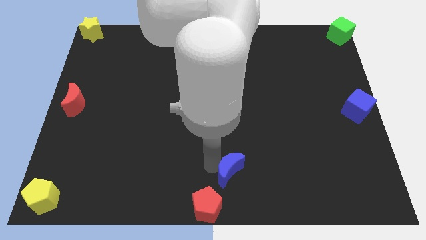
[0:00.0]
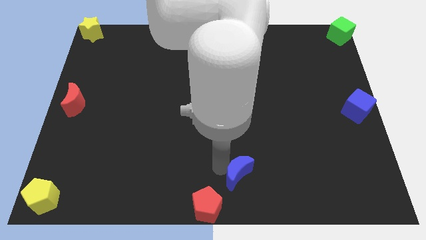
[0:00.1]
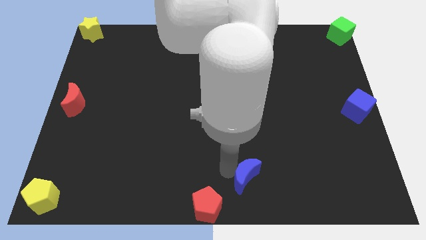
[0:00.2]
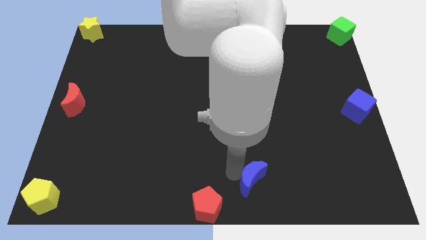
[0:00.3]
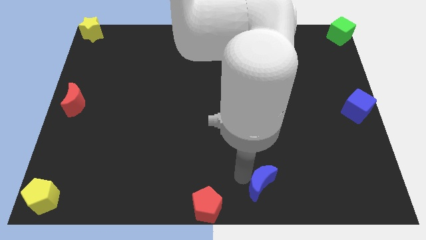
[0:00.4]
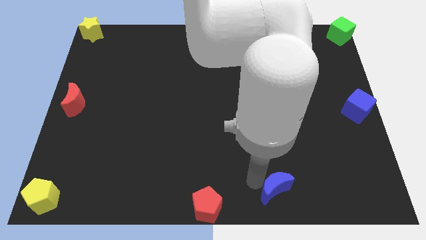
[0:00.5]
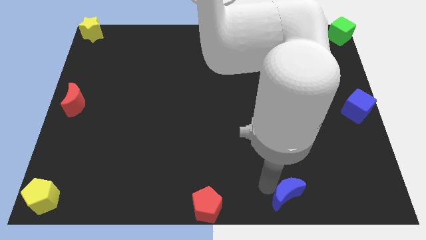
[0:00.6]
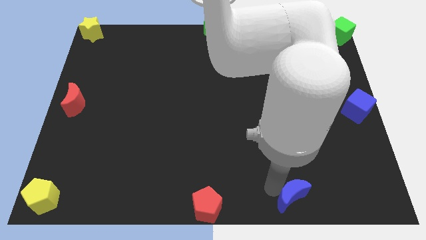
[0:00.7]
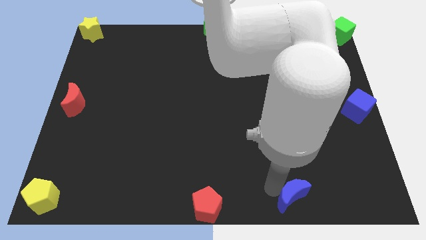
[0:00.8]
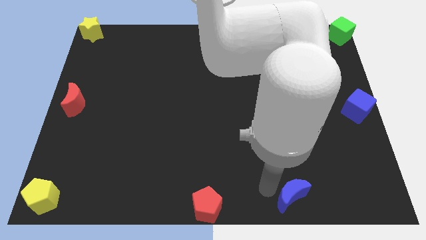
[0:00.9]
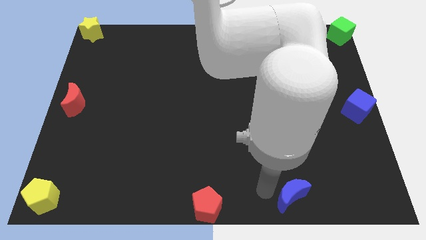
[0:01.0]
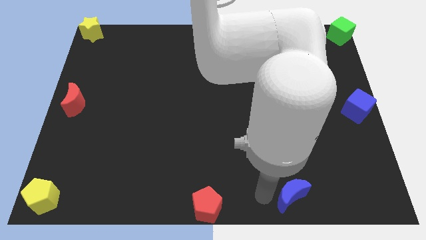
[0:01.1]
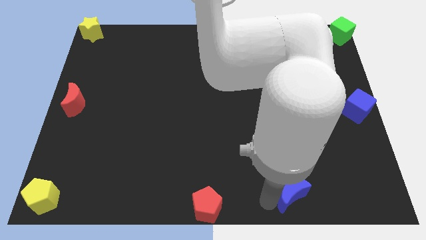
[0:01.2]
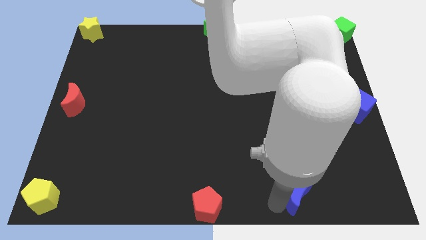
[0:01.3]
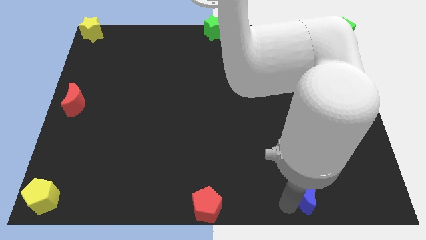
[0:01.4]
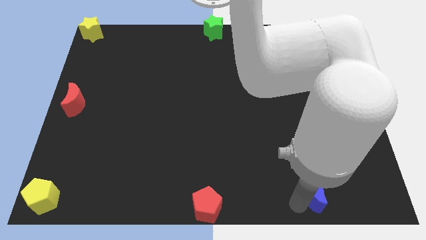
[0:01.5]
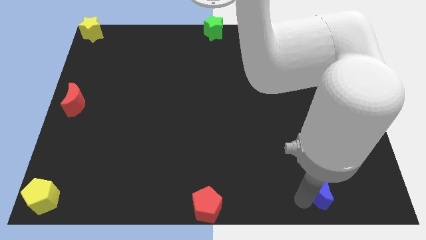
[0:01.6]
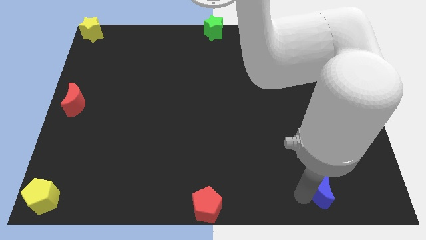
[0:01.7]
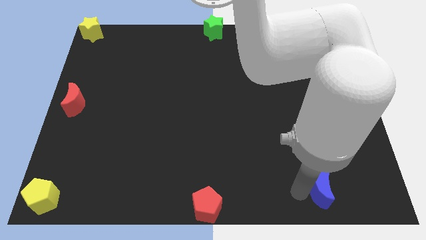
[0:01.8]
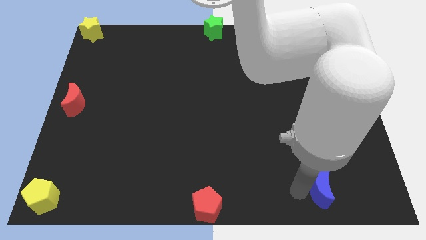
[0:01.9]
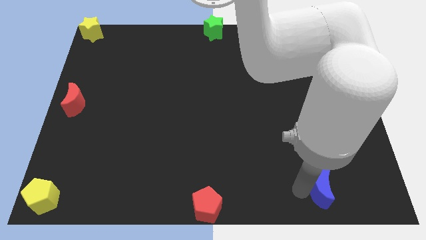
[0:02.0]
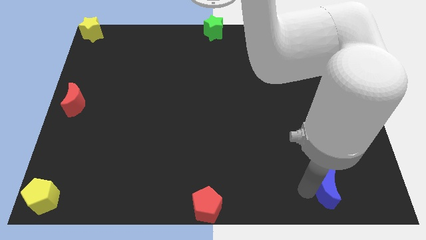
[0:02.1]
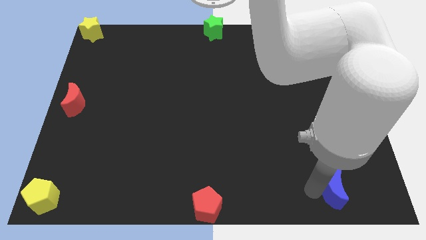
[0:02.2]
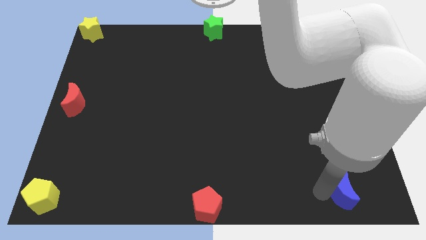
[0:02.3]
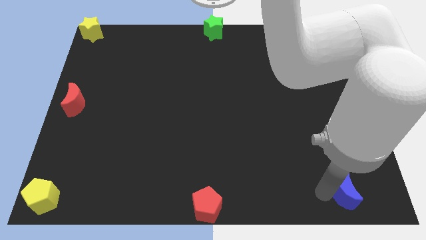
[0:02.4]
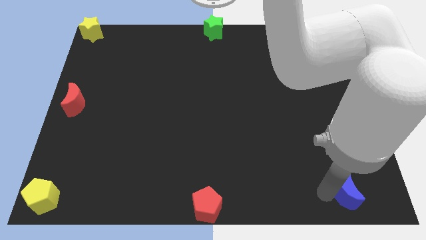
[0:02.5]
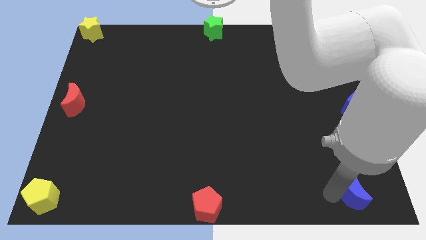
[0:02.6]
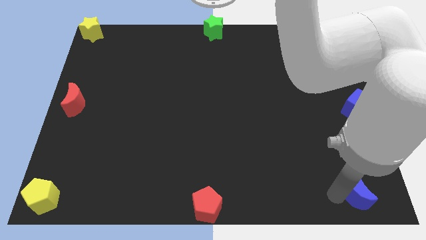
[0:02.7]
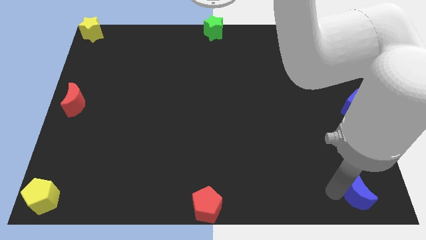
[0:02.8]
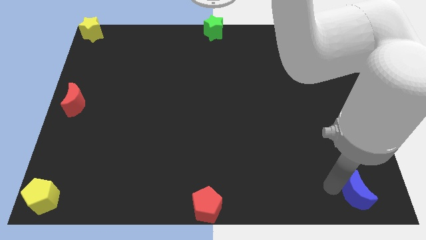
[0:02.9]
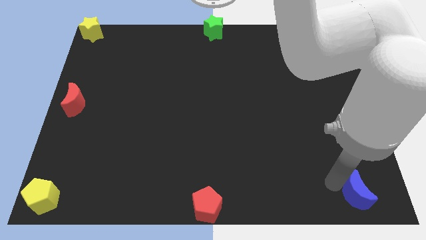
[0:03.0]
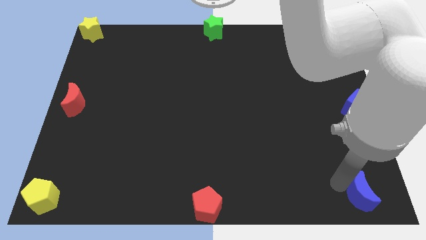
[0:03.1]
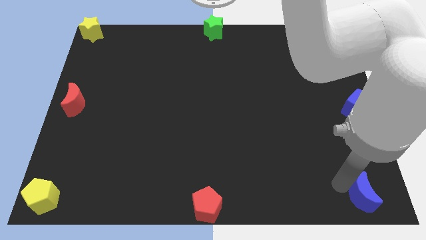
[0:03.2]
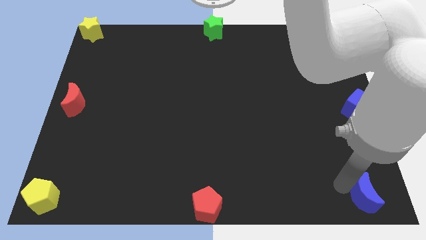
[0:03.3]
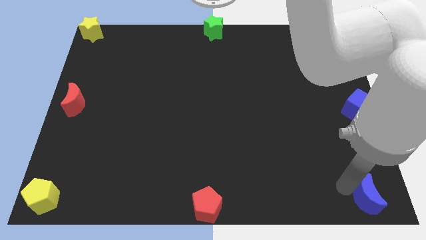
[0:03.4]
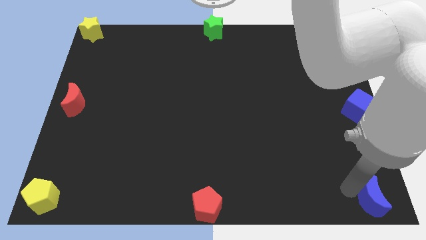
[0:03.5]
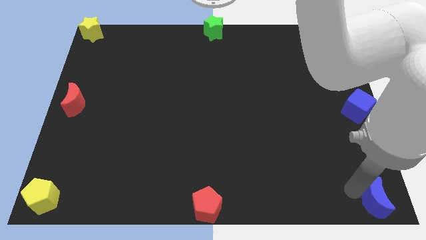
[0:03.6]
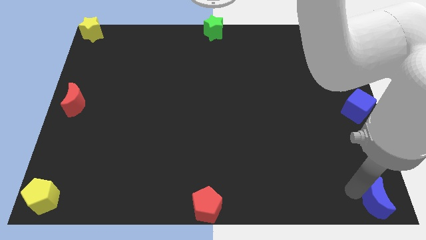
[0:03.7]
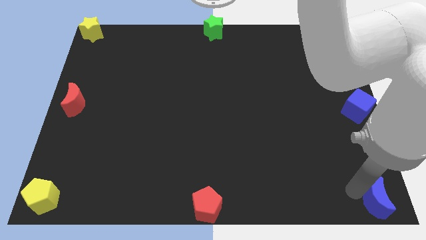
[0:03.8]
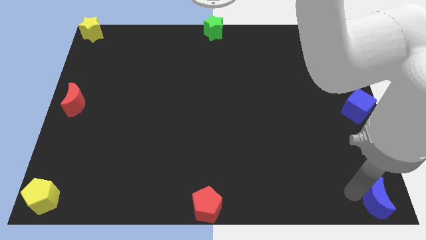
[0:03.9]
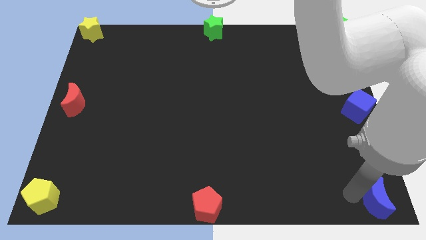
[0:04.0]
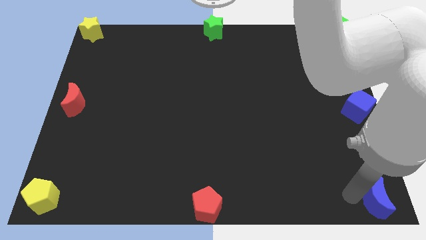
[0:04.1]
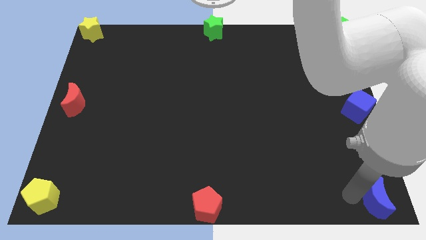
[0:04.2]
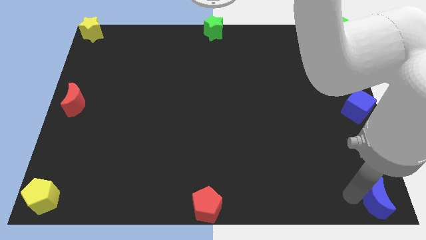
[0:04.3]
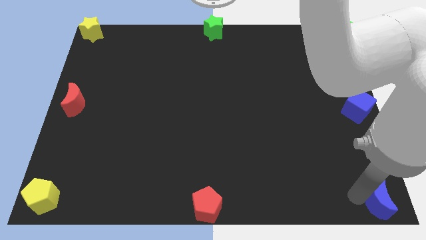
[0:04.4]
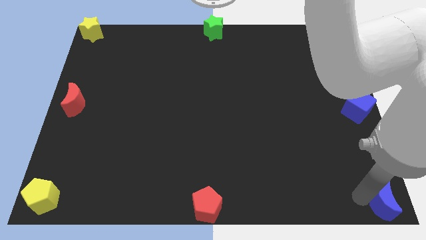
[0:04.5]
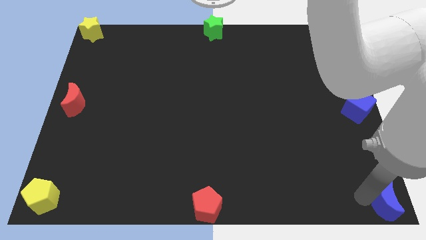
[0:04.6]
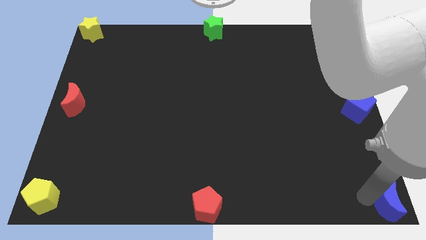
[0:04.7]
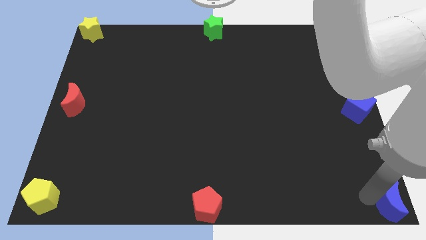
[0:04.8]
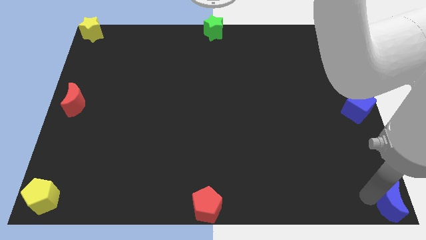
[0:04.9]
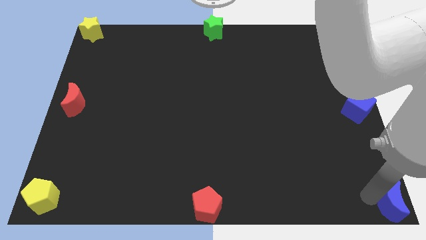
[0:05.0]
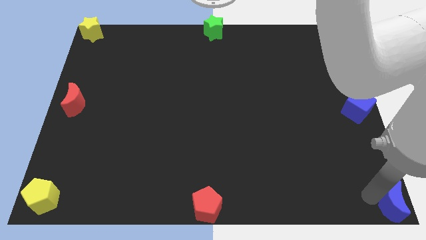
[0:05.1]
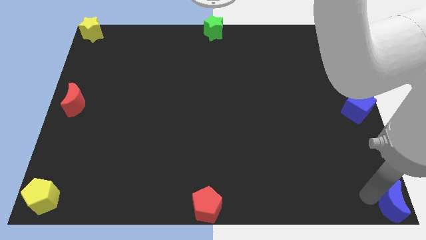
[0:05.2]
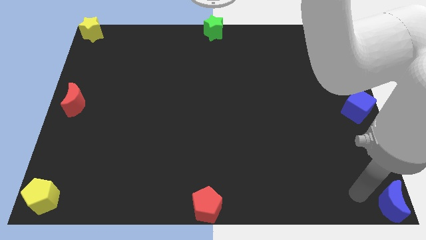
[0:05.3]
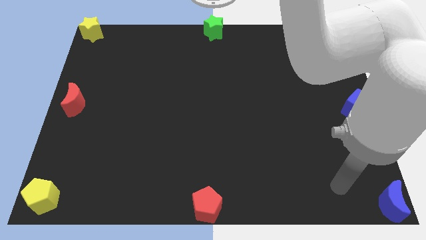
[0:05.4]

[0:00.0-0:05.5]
place blue crescent towards bottom right corner

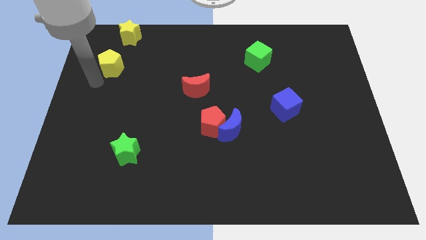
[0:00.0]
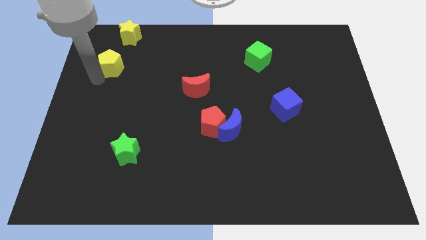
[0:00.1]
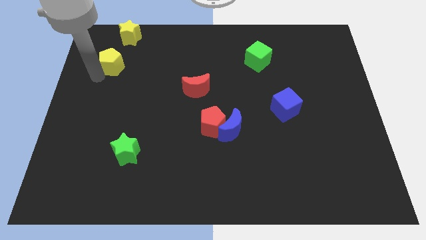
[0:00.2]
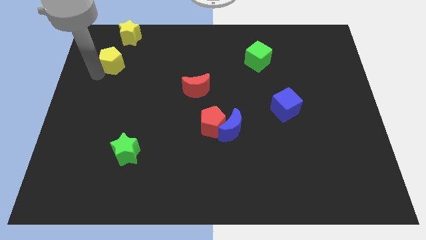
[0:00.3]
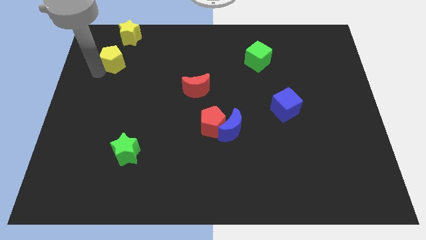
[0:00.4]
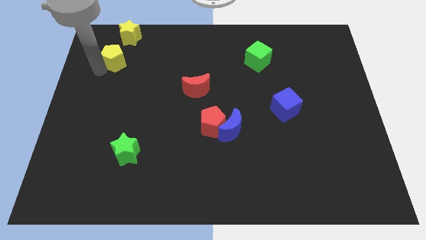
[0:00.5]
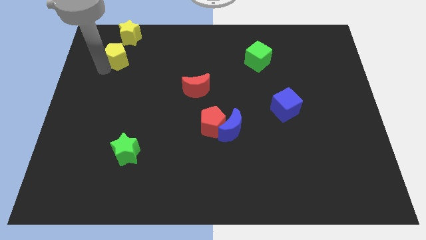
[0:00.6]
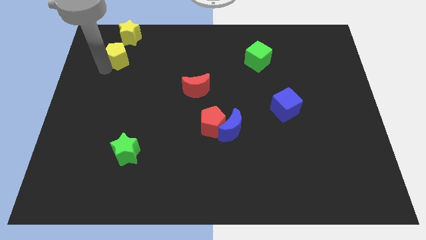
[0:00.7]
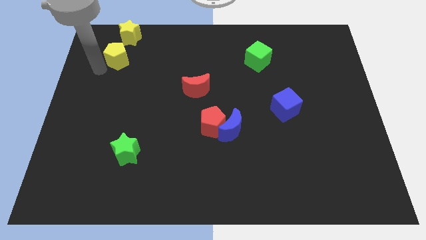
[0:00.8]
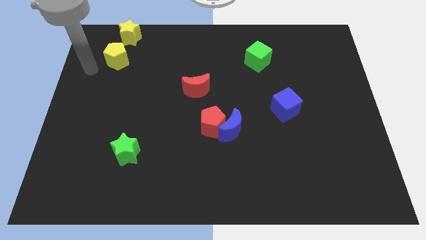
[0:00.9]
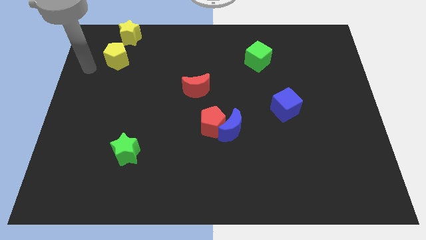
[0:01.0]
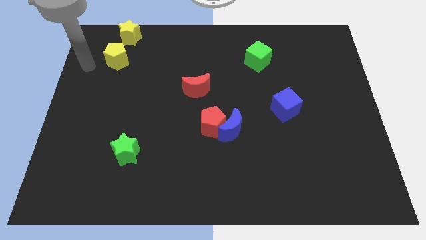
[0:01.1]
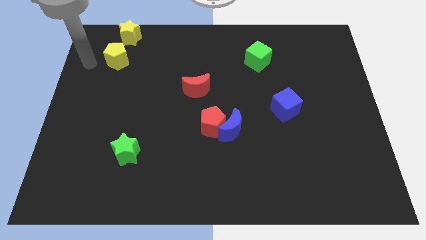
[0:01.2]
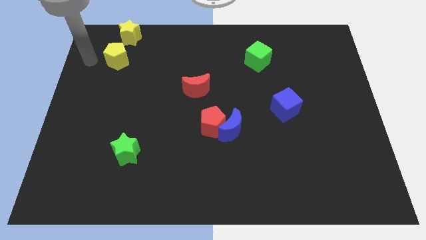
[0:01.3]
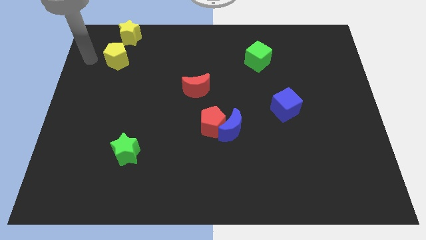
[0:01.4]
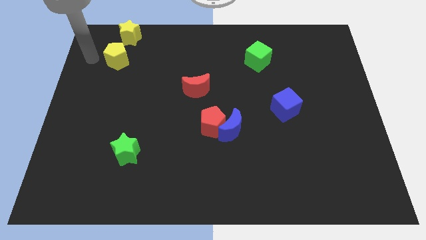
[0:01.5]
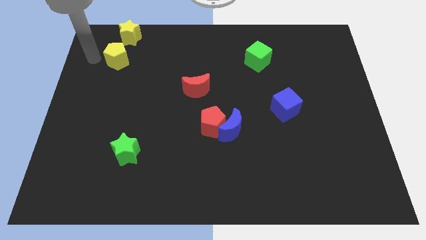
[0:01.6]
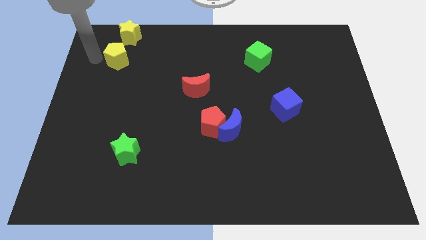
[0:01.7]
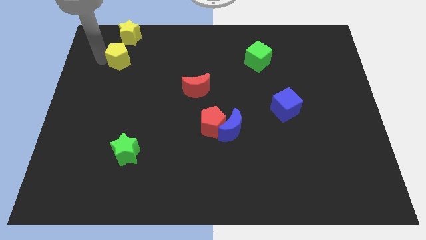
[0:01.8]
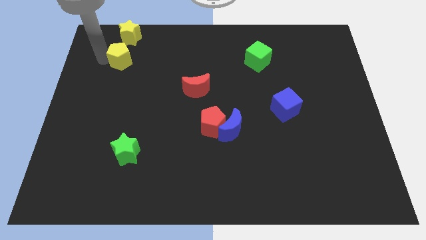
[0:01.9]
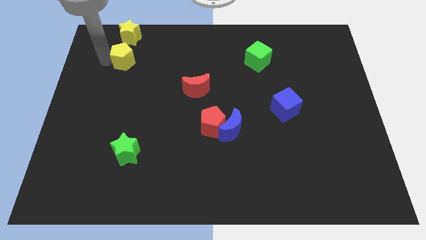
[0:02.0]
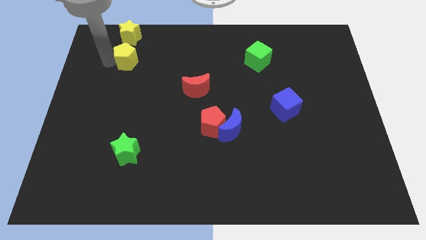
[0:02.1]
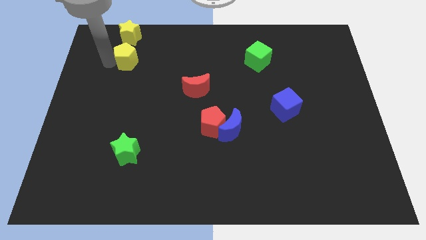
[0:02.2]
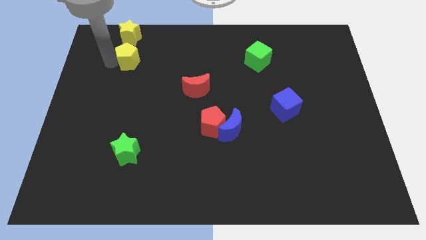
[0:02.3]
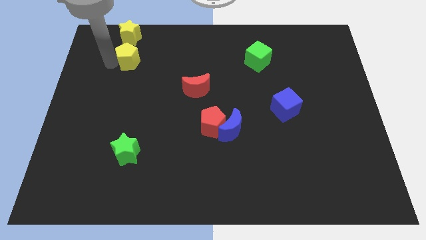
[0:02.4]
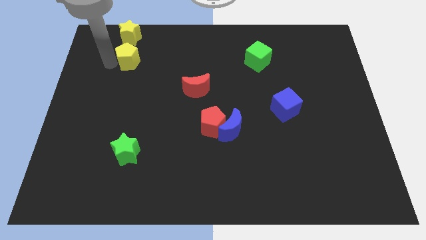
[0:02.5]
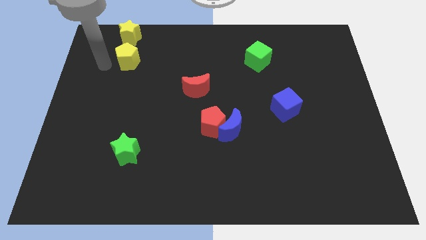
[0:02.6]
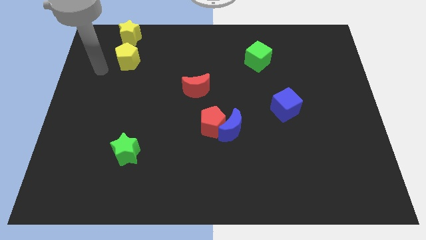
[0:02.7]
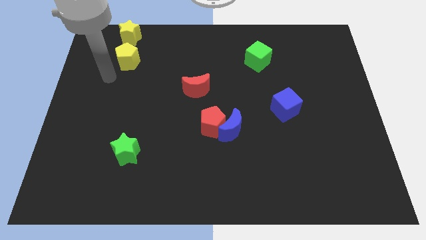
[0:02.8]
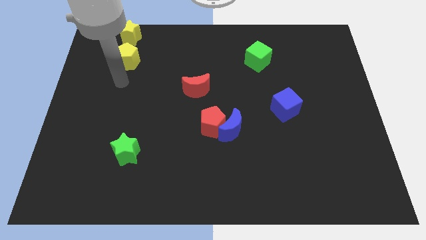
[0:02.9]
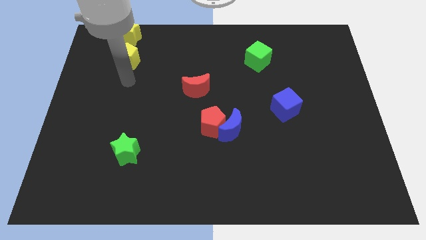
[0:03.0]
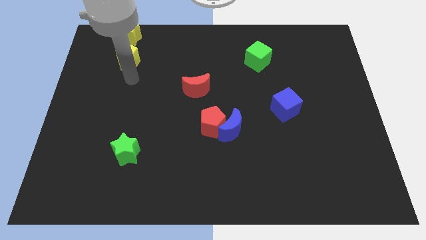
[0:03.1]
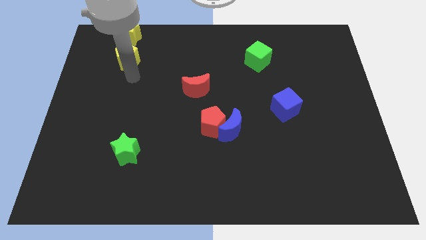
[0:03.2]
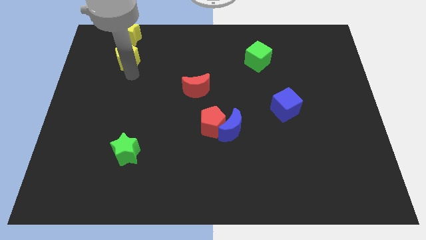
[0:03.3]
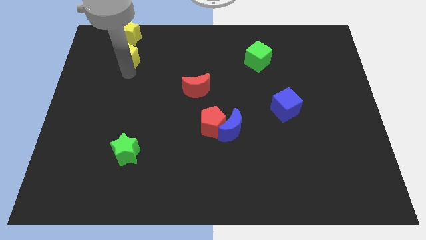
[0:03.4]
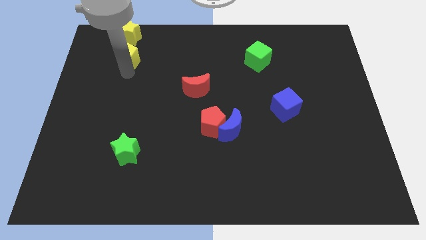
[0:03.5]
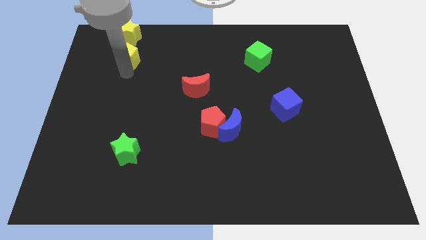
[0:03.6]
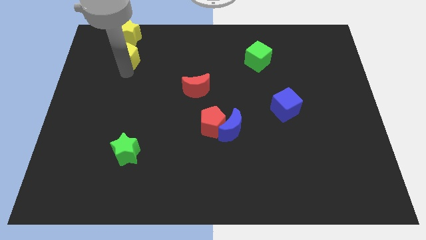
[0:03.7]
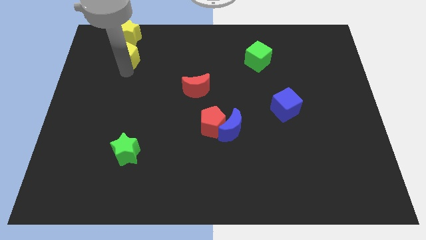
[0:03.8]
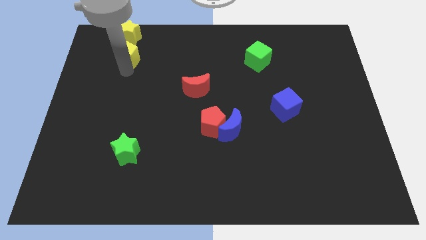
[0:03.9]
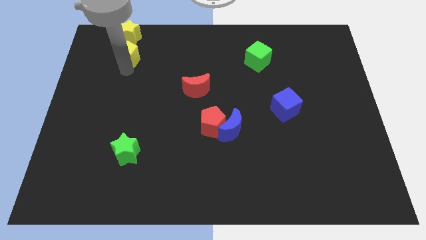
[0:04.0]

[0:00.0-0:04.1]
push yellow pentagon below the yellow star
